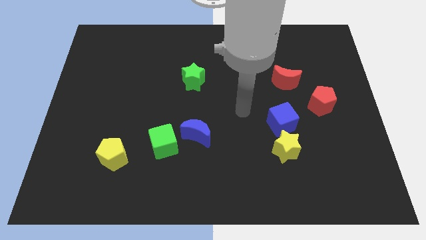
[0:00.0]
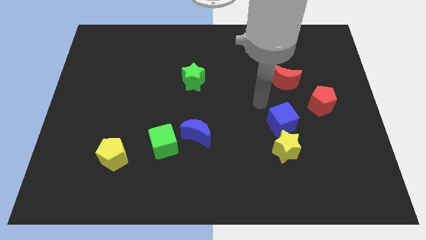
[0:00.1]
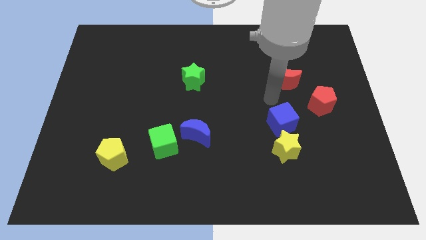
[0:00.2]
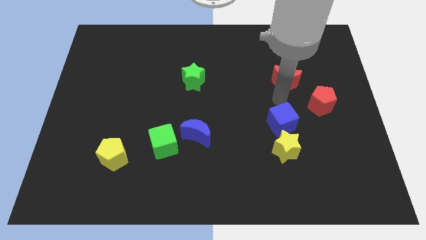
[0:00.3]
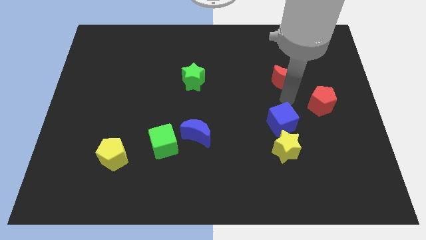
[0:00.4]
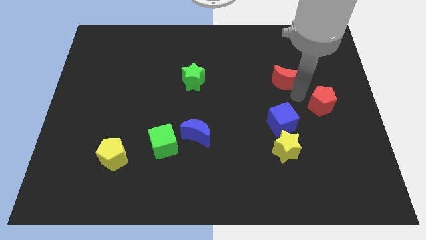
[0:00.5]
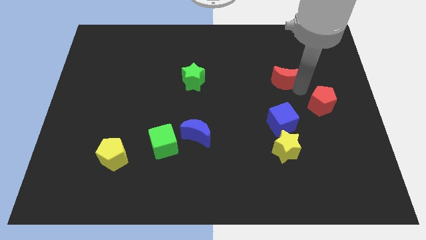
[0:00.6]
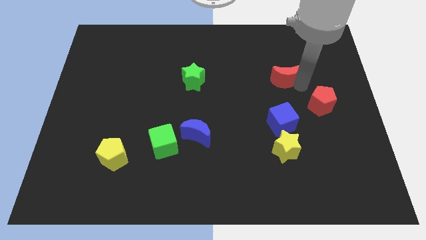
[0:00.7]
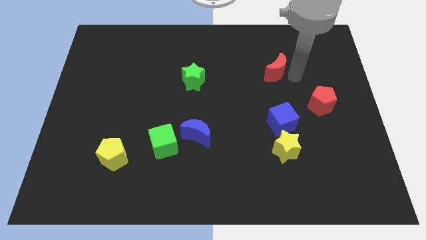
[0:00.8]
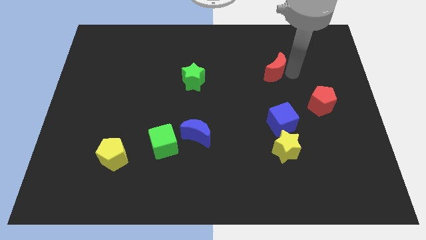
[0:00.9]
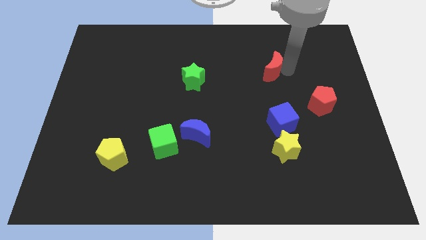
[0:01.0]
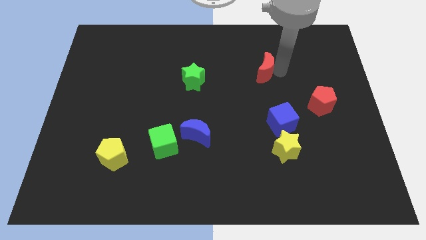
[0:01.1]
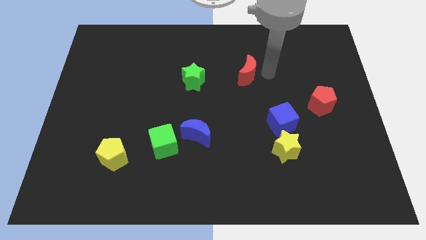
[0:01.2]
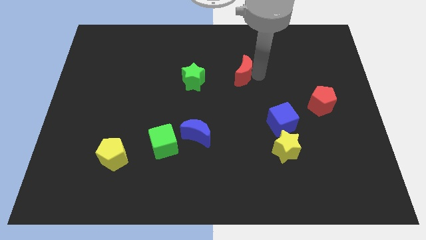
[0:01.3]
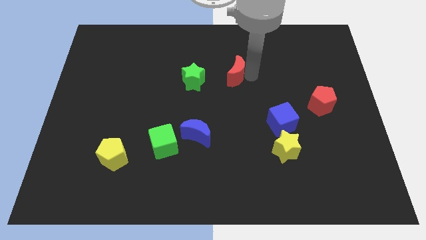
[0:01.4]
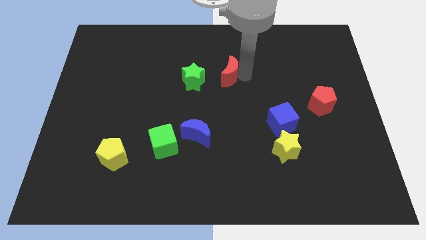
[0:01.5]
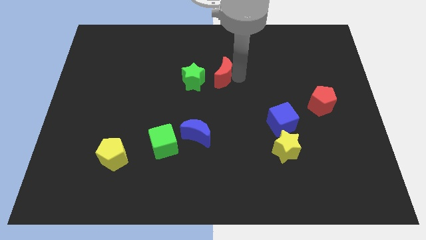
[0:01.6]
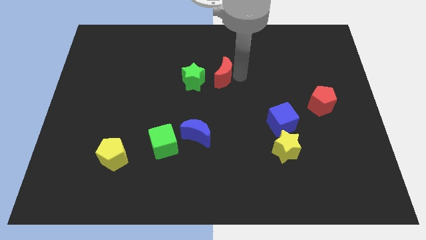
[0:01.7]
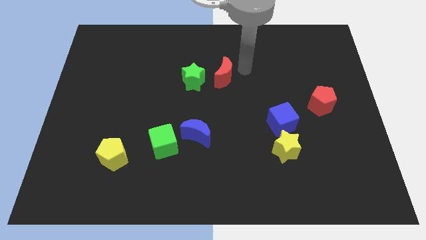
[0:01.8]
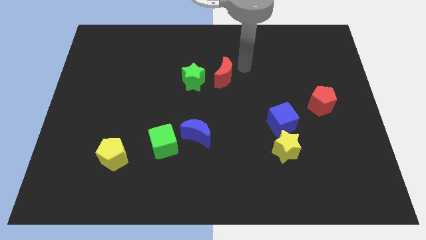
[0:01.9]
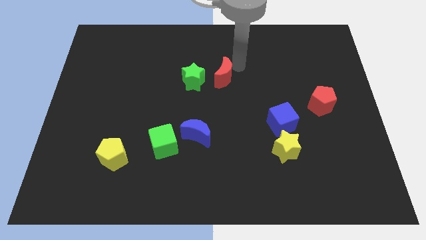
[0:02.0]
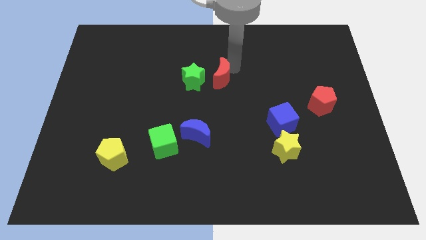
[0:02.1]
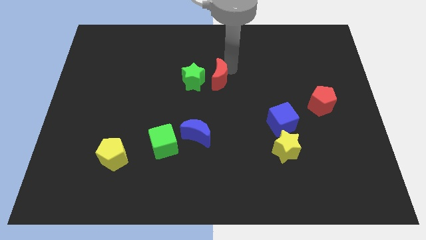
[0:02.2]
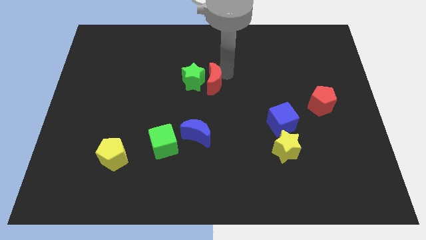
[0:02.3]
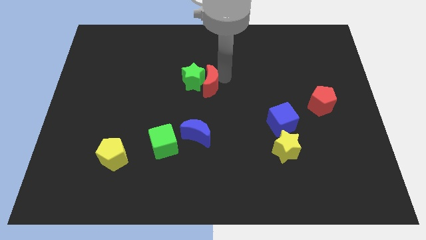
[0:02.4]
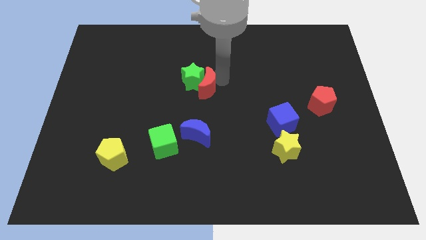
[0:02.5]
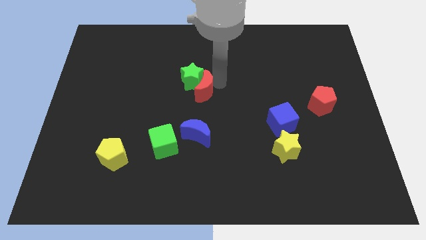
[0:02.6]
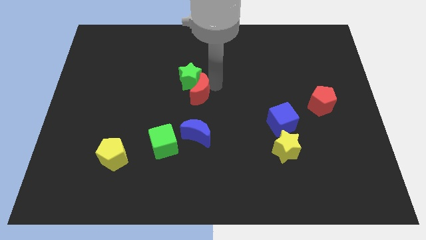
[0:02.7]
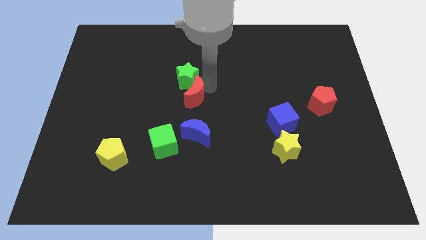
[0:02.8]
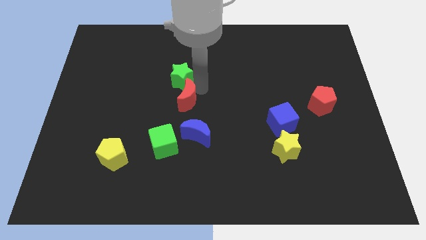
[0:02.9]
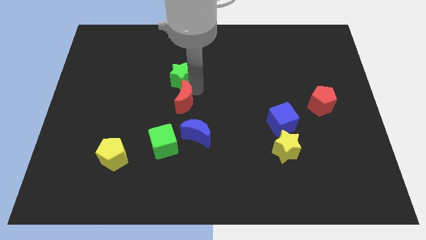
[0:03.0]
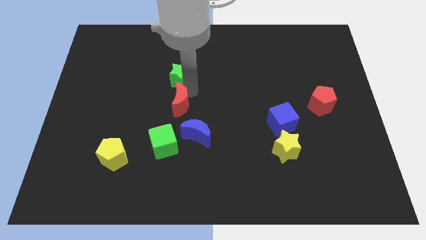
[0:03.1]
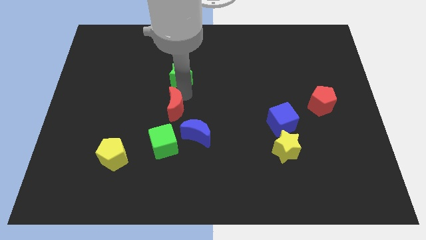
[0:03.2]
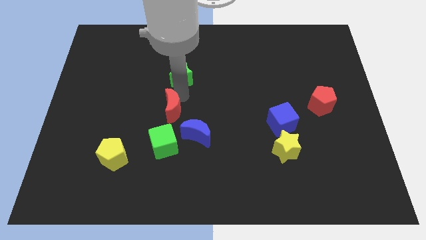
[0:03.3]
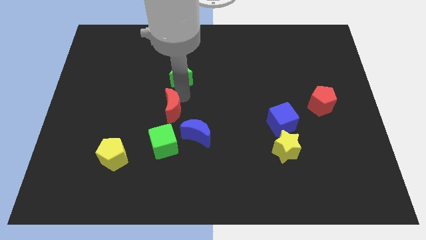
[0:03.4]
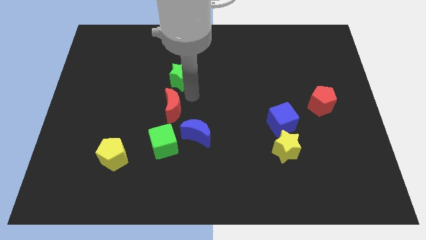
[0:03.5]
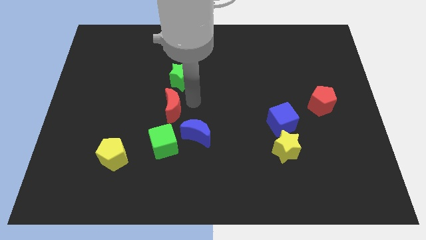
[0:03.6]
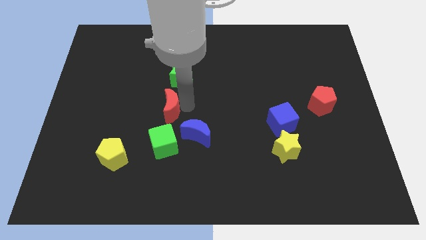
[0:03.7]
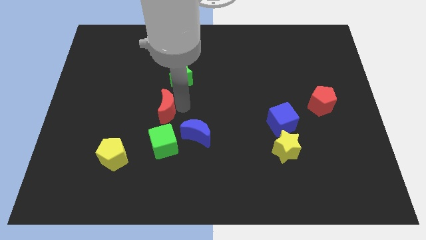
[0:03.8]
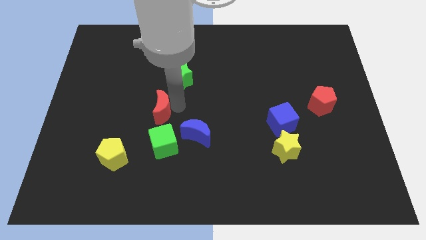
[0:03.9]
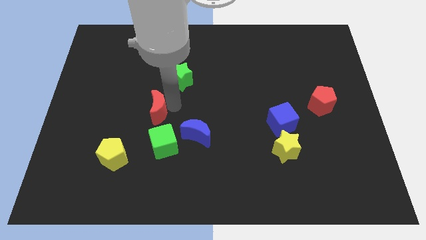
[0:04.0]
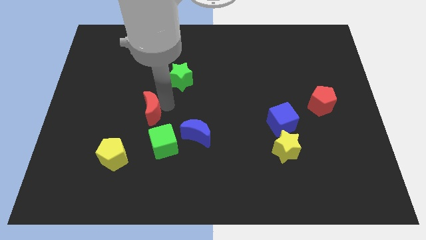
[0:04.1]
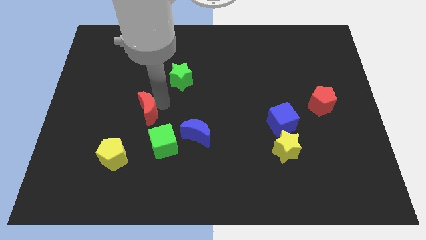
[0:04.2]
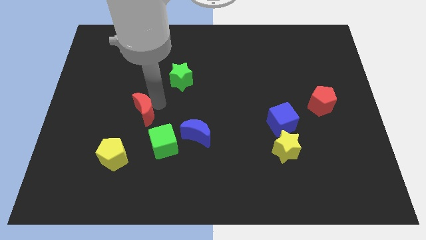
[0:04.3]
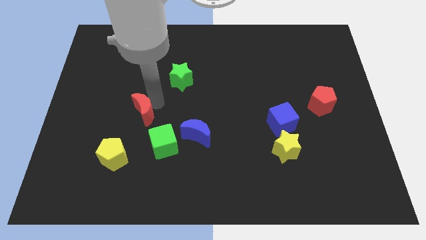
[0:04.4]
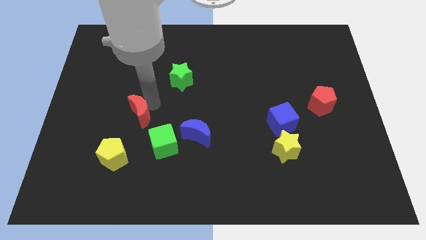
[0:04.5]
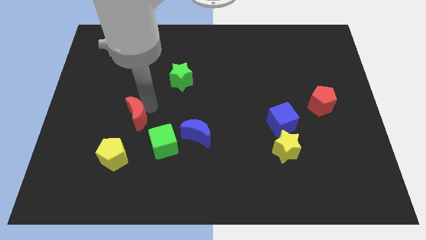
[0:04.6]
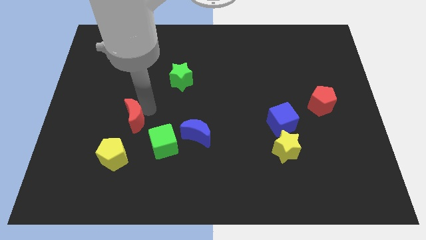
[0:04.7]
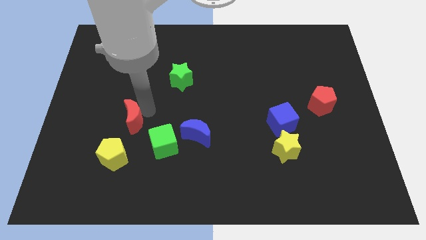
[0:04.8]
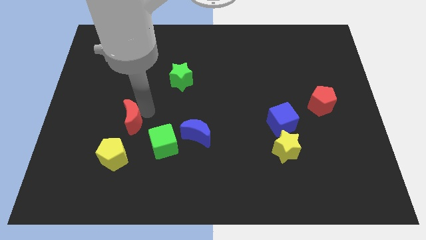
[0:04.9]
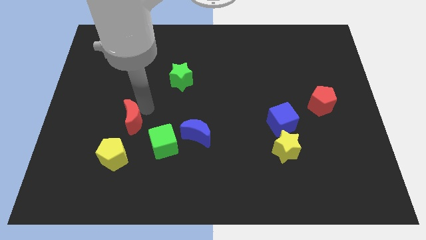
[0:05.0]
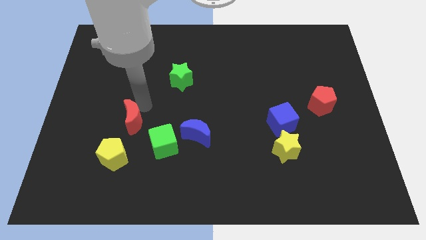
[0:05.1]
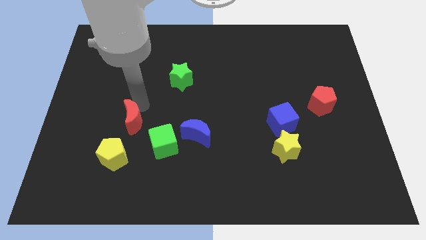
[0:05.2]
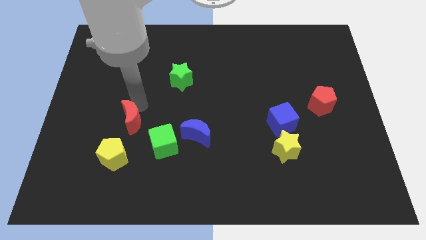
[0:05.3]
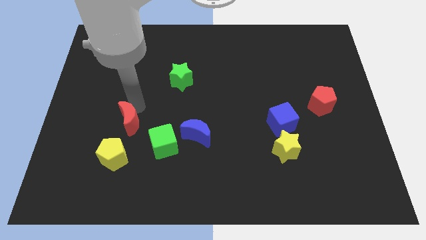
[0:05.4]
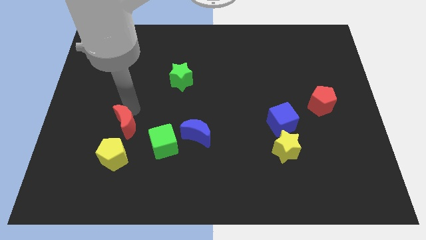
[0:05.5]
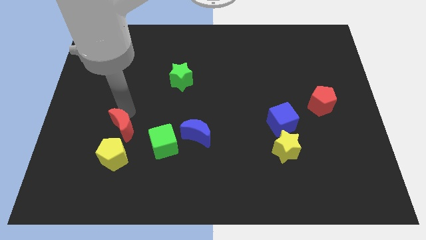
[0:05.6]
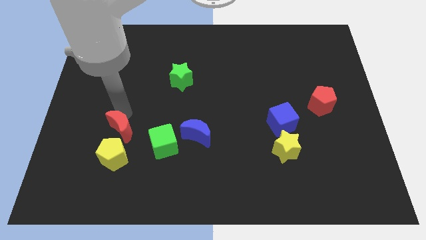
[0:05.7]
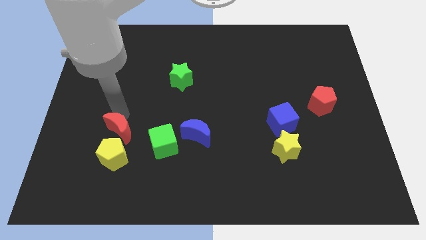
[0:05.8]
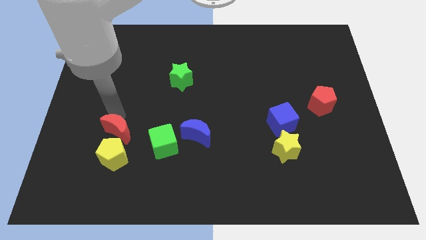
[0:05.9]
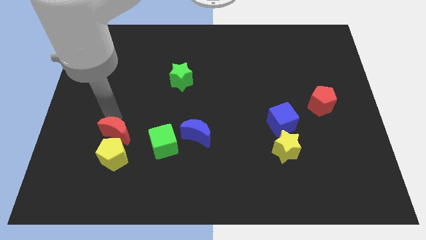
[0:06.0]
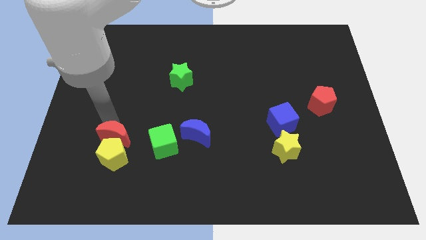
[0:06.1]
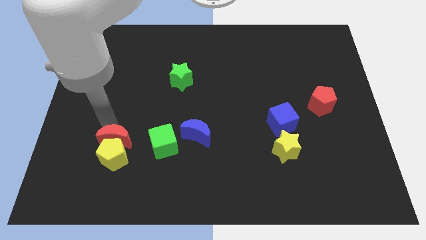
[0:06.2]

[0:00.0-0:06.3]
move the red moon next to the yellow pentagon

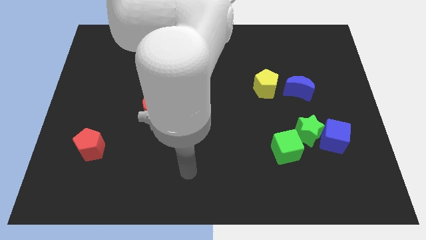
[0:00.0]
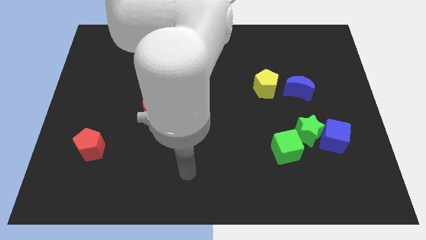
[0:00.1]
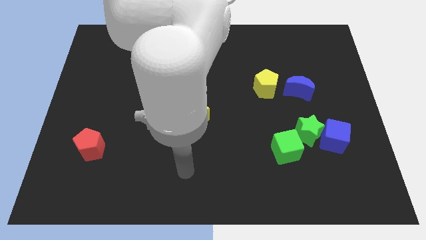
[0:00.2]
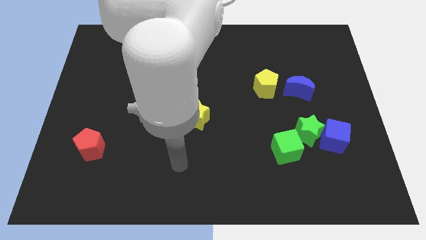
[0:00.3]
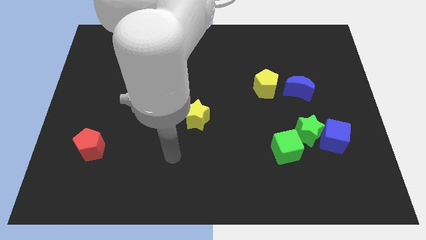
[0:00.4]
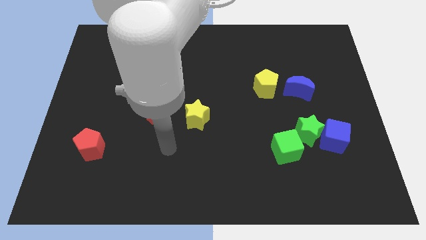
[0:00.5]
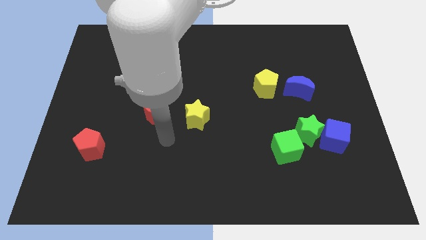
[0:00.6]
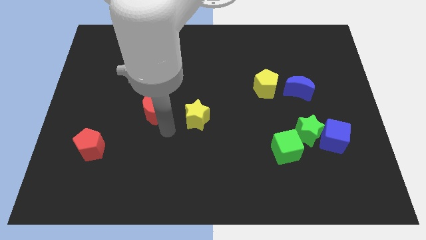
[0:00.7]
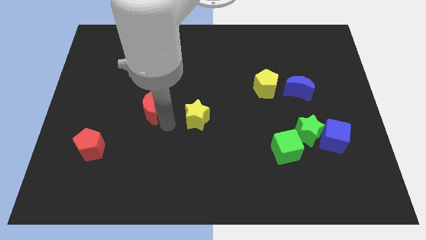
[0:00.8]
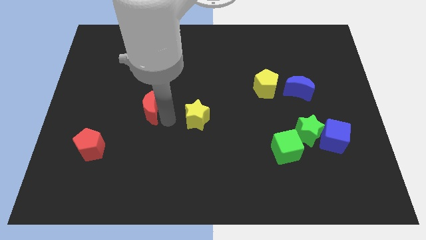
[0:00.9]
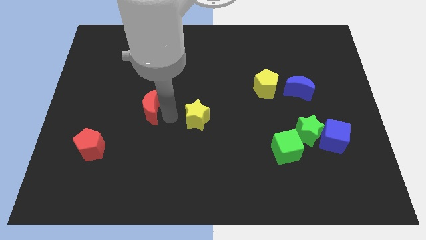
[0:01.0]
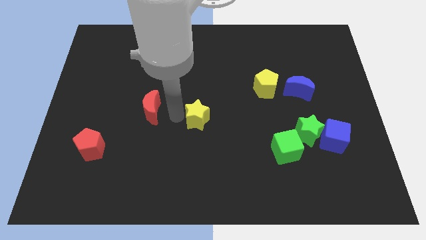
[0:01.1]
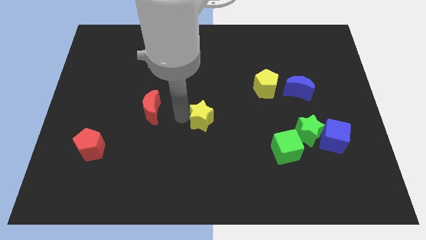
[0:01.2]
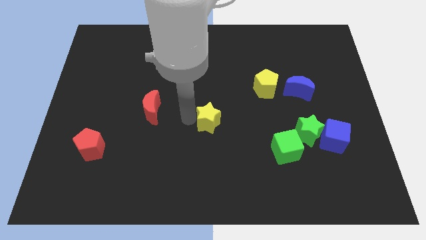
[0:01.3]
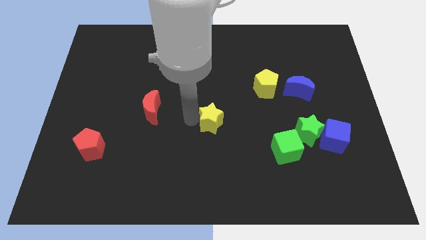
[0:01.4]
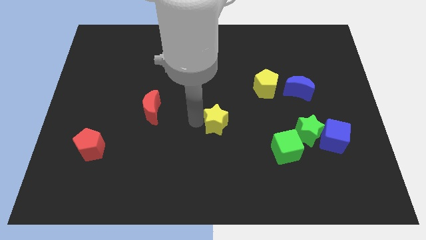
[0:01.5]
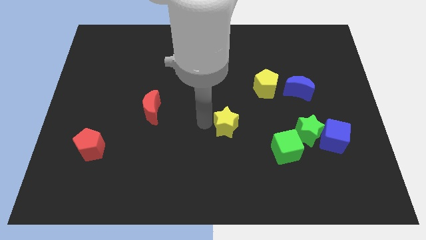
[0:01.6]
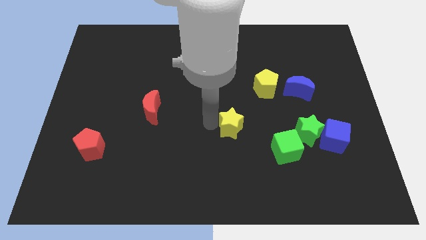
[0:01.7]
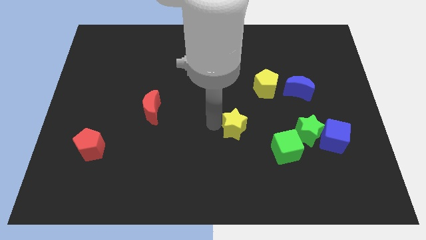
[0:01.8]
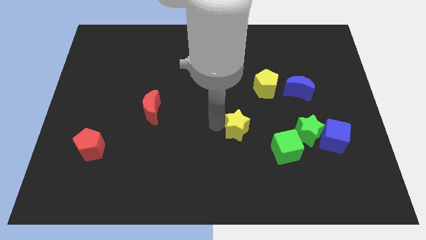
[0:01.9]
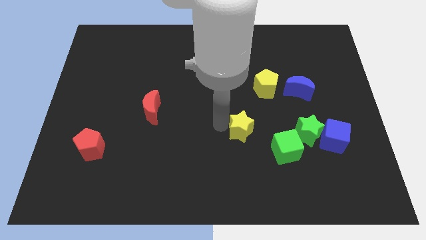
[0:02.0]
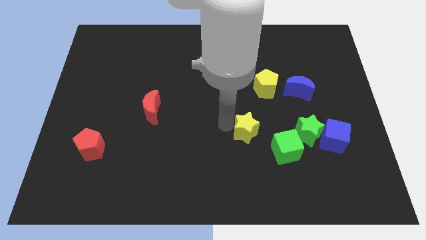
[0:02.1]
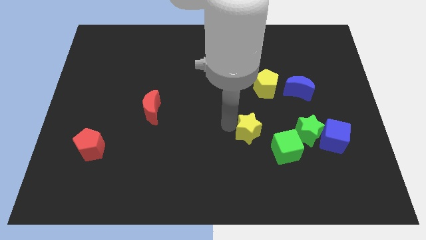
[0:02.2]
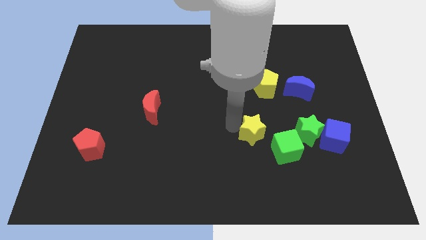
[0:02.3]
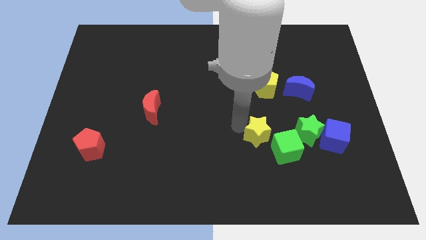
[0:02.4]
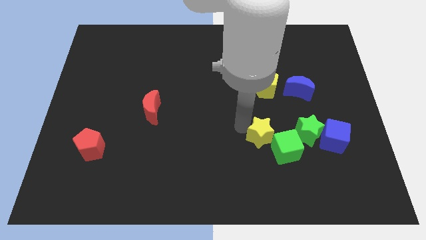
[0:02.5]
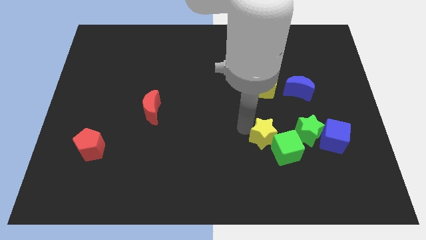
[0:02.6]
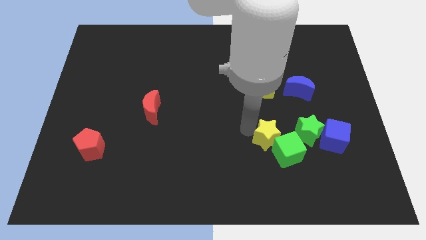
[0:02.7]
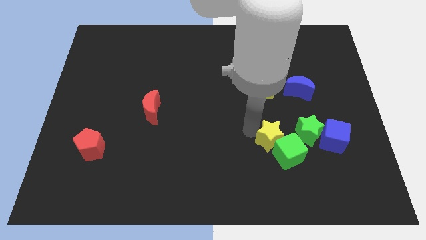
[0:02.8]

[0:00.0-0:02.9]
push the yellow star next to the green cube
